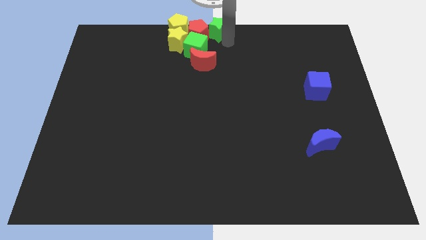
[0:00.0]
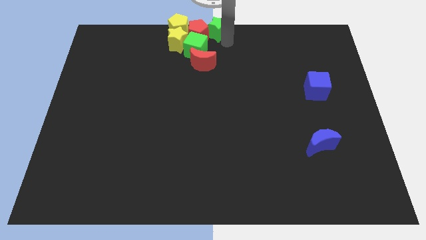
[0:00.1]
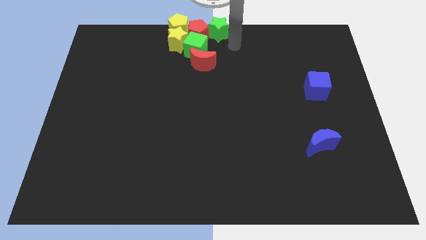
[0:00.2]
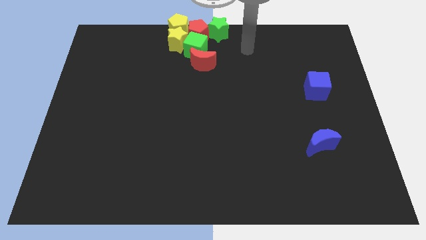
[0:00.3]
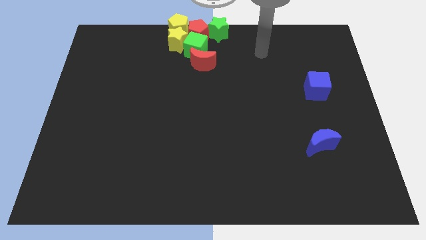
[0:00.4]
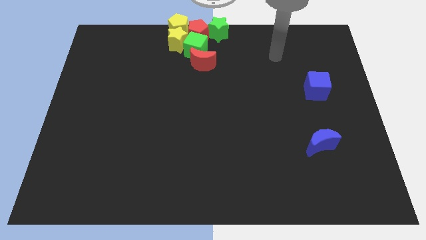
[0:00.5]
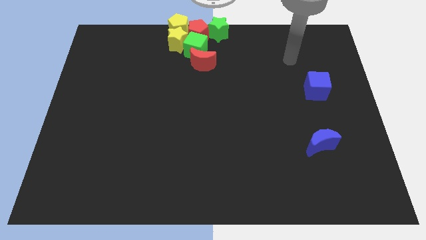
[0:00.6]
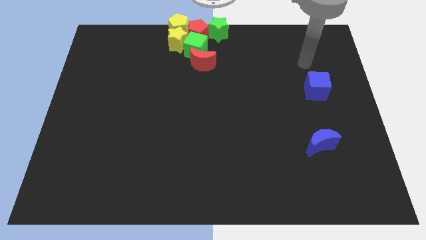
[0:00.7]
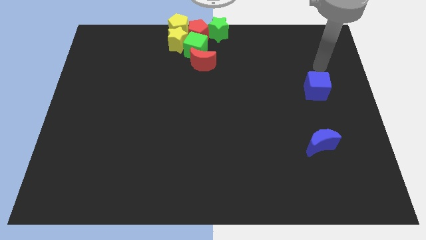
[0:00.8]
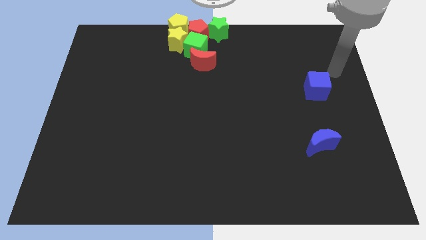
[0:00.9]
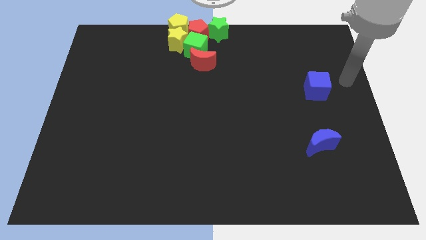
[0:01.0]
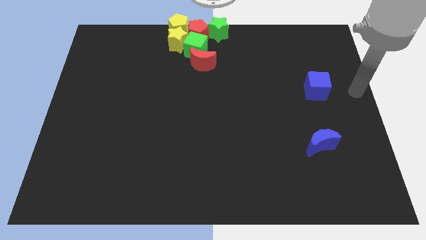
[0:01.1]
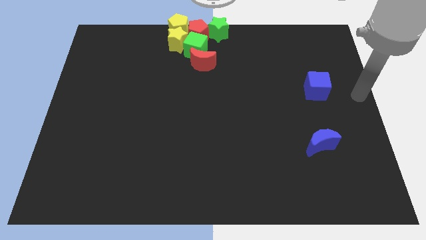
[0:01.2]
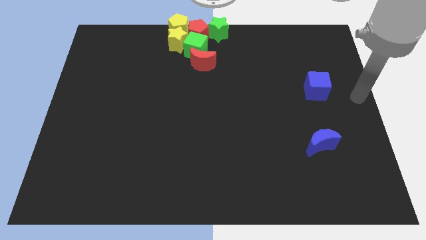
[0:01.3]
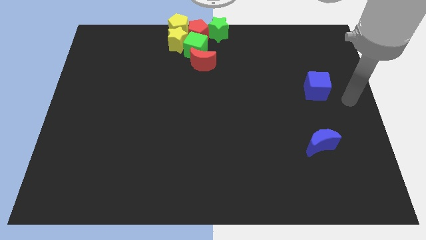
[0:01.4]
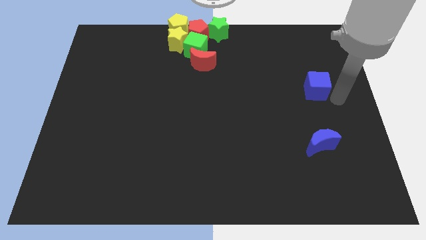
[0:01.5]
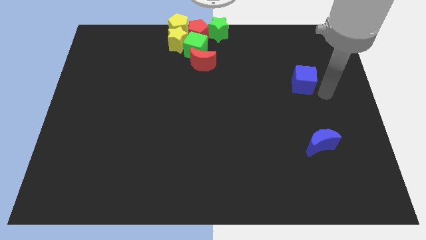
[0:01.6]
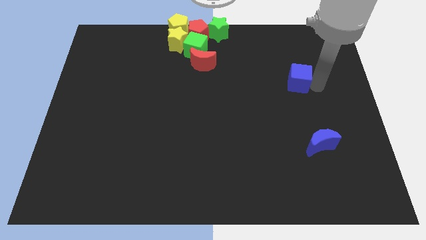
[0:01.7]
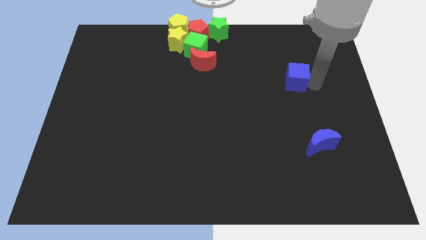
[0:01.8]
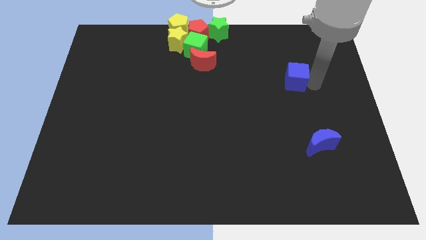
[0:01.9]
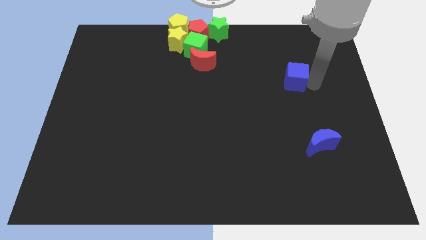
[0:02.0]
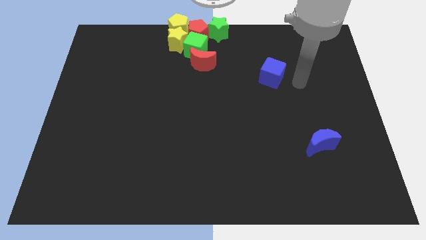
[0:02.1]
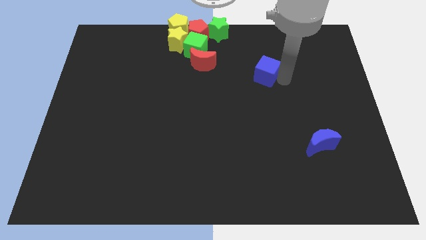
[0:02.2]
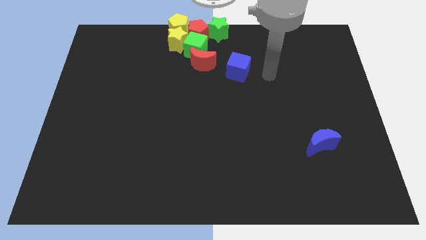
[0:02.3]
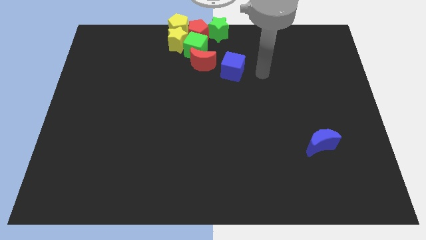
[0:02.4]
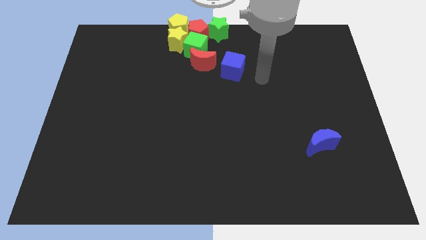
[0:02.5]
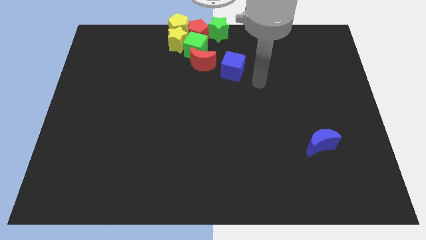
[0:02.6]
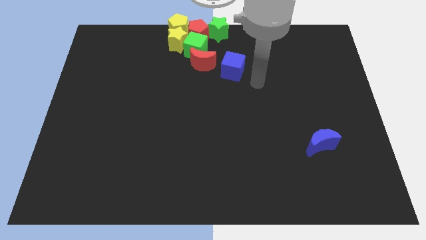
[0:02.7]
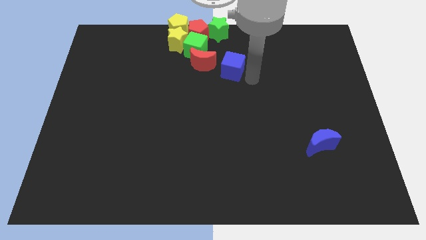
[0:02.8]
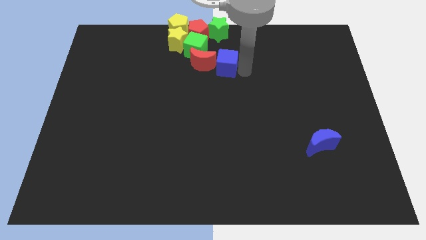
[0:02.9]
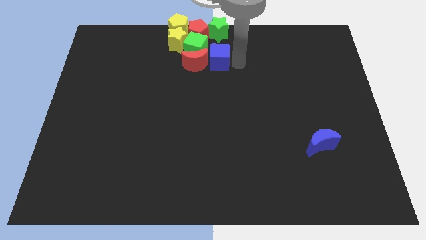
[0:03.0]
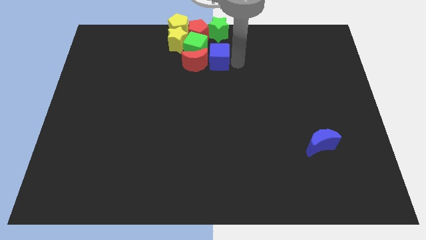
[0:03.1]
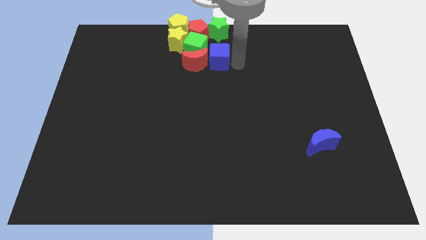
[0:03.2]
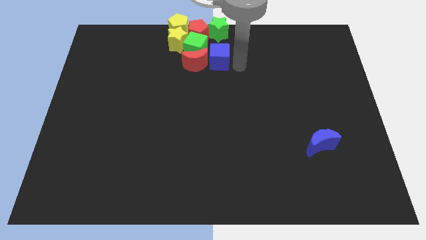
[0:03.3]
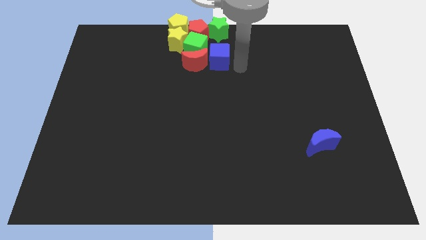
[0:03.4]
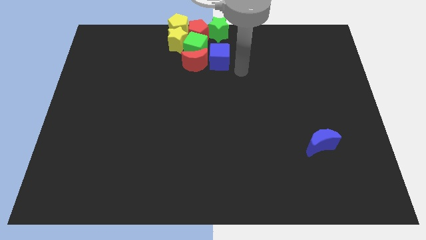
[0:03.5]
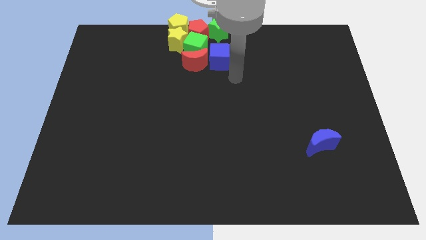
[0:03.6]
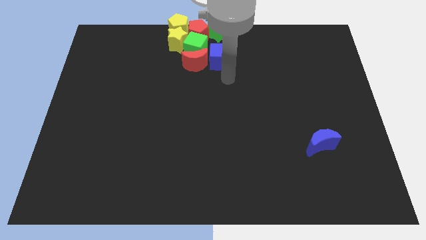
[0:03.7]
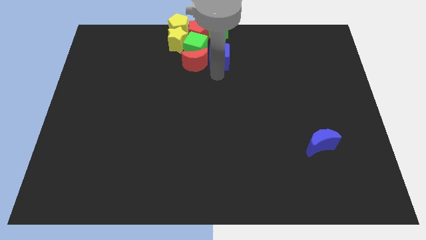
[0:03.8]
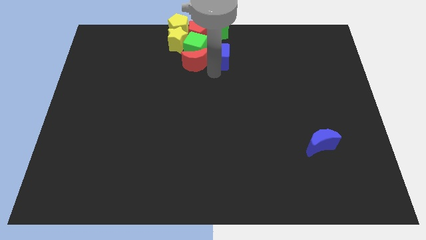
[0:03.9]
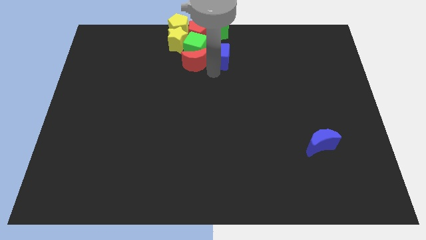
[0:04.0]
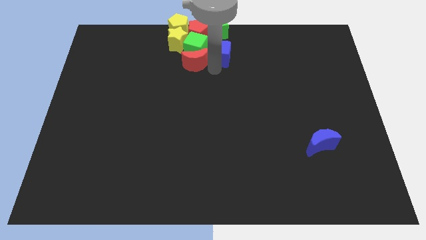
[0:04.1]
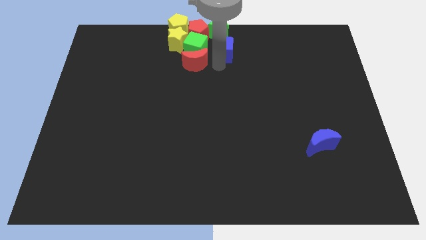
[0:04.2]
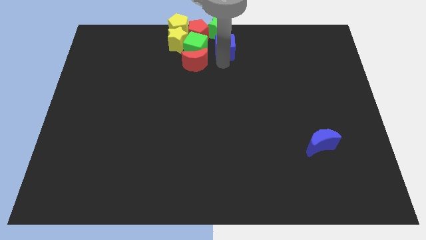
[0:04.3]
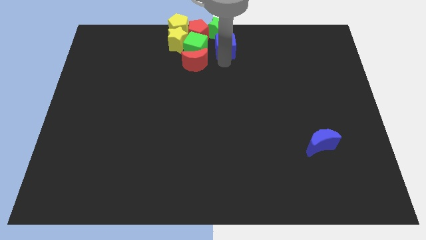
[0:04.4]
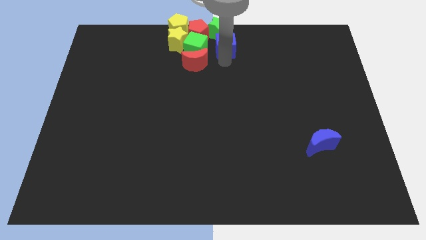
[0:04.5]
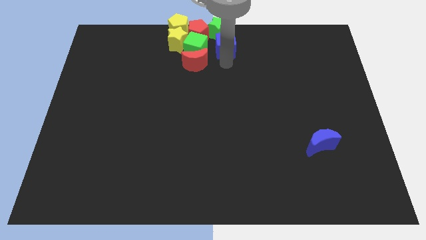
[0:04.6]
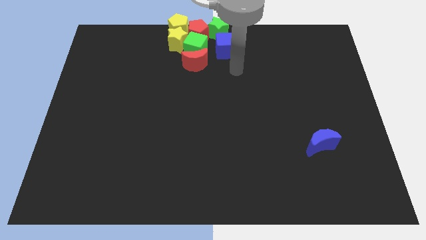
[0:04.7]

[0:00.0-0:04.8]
place the blue cube right to the green cube

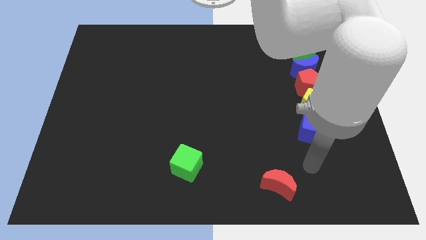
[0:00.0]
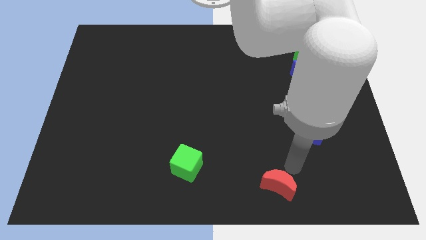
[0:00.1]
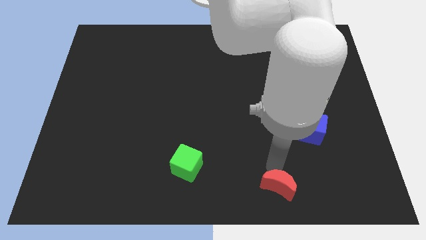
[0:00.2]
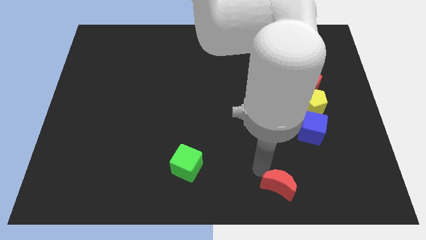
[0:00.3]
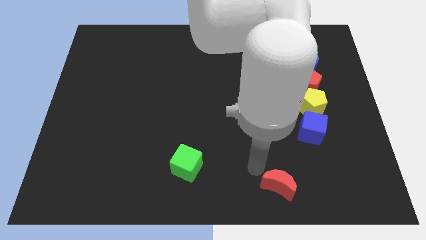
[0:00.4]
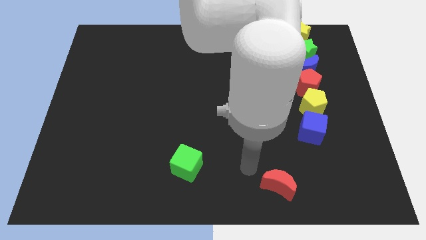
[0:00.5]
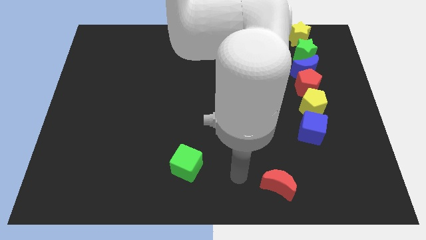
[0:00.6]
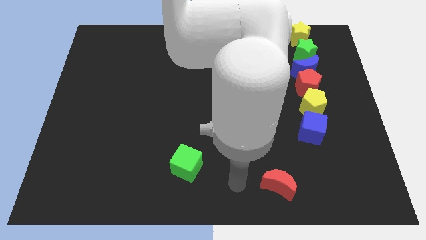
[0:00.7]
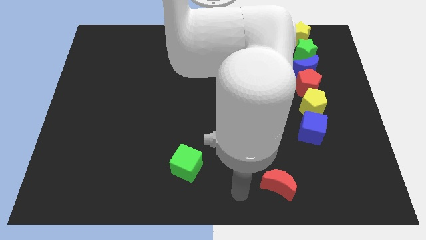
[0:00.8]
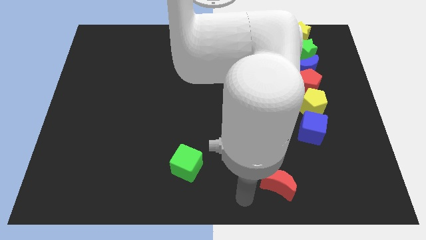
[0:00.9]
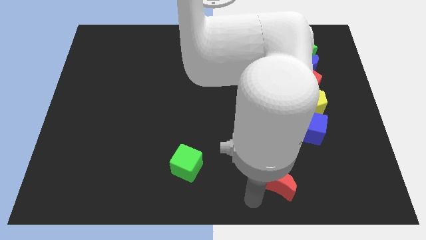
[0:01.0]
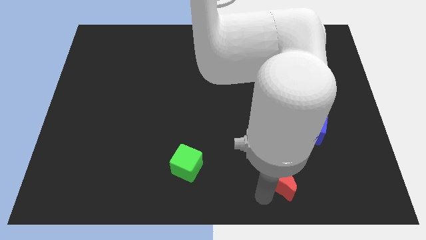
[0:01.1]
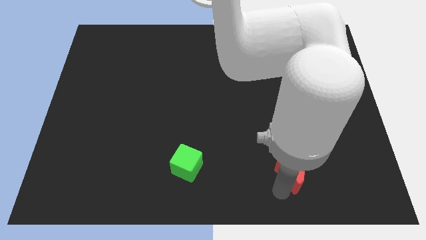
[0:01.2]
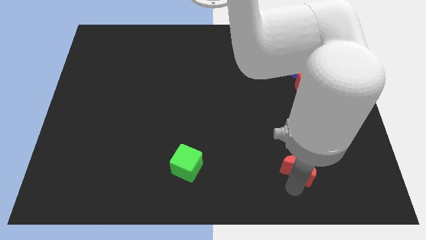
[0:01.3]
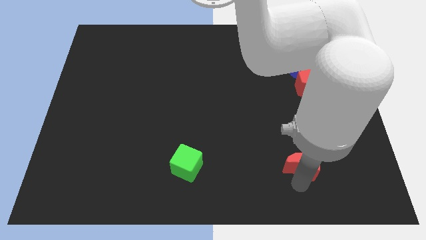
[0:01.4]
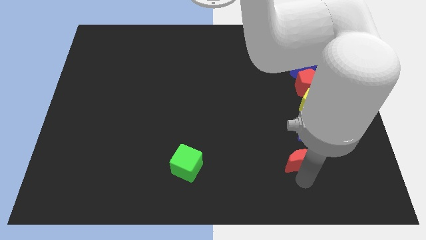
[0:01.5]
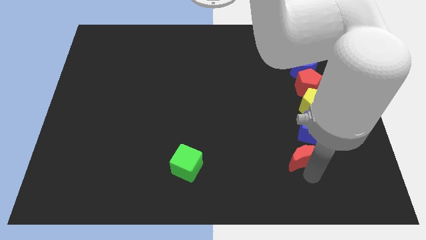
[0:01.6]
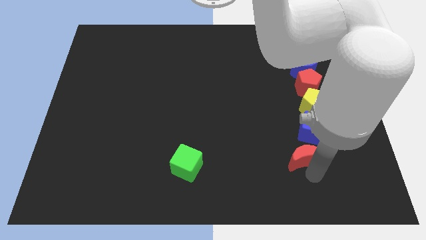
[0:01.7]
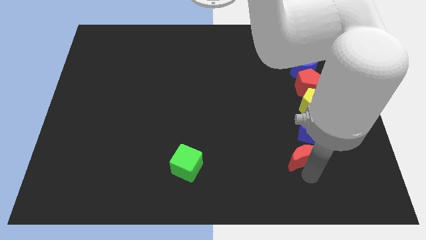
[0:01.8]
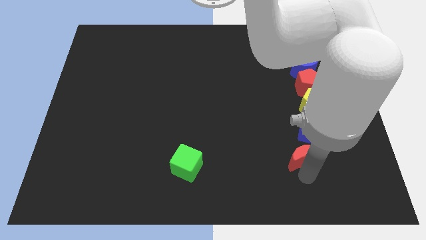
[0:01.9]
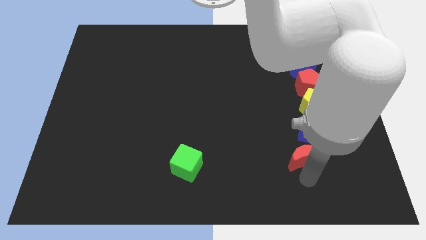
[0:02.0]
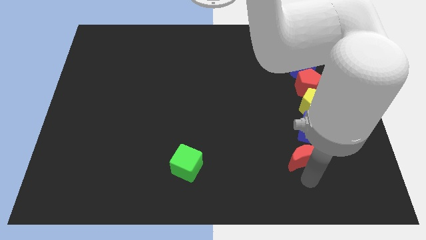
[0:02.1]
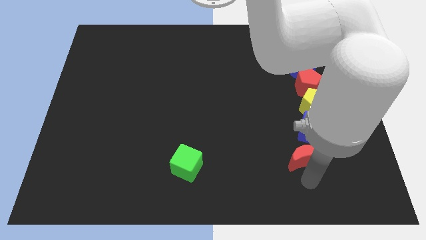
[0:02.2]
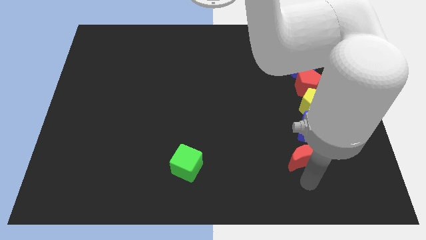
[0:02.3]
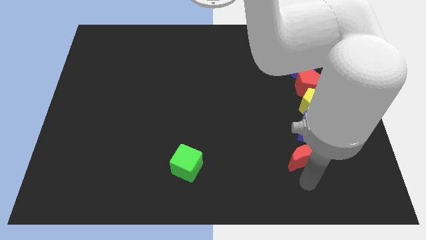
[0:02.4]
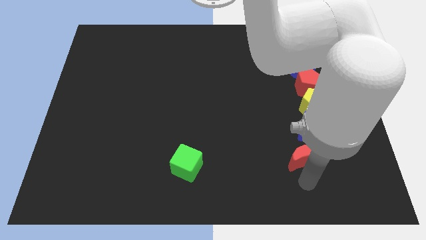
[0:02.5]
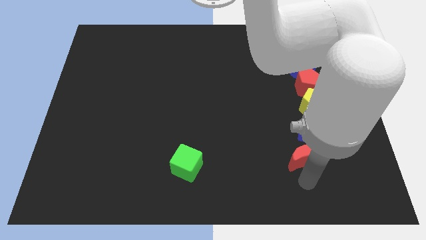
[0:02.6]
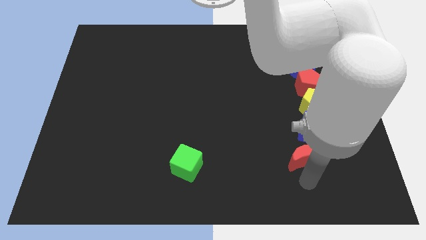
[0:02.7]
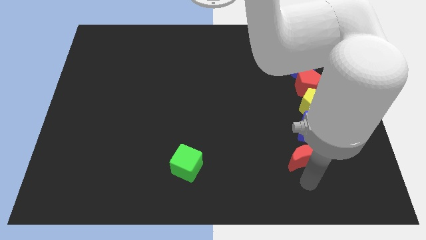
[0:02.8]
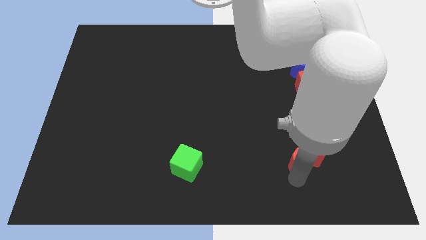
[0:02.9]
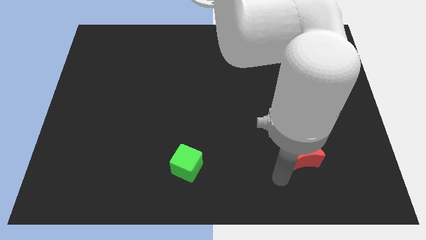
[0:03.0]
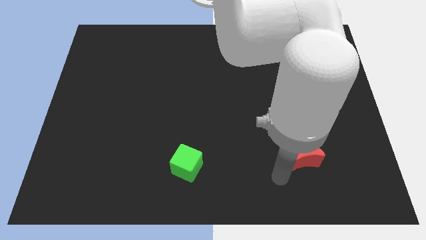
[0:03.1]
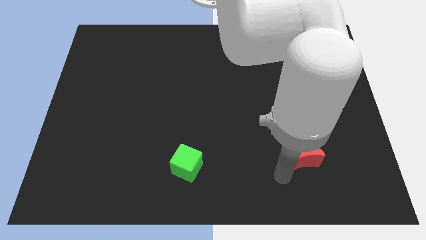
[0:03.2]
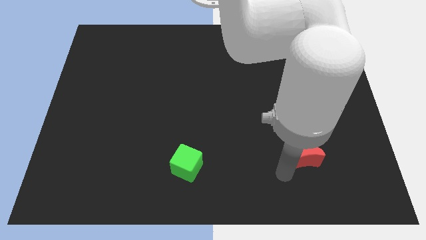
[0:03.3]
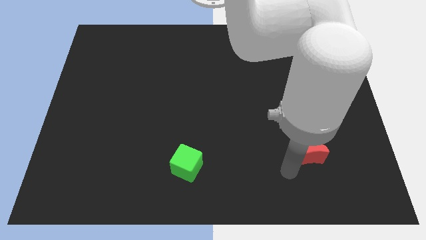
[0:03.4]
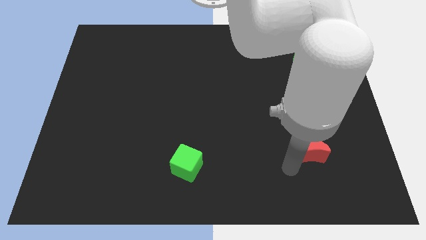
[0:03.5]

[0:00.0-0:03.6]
place the red moon below the blue cube

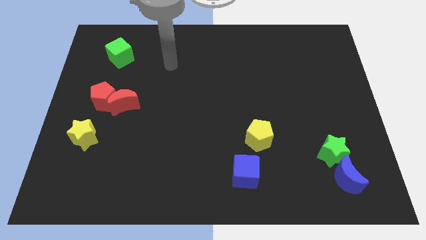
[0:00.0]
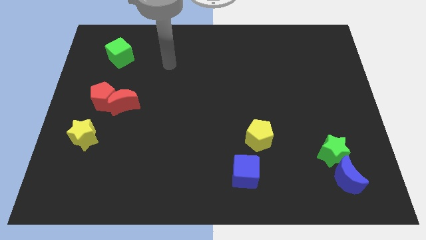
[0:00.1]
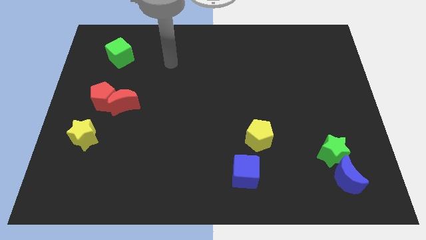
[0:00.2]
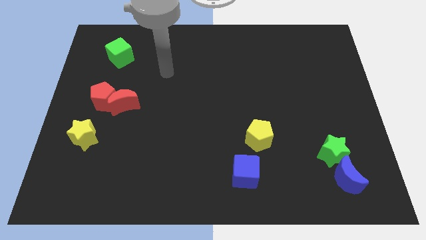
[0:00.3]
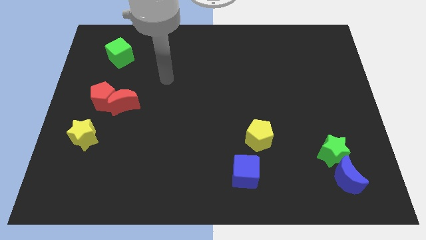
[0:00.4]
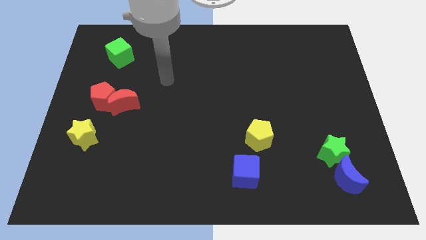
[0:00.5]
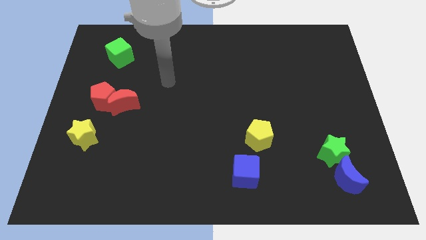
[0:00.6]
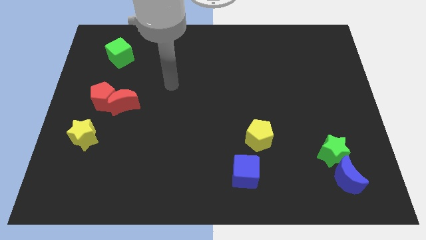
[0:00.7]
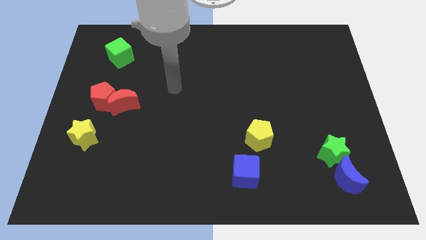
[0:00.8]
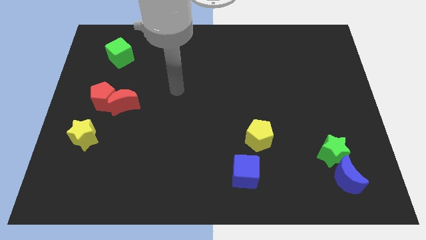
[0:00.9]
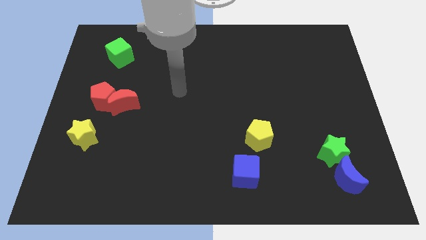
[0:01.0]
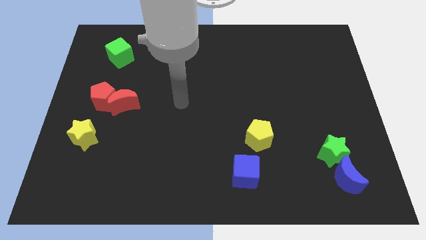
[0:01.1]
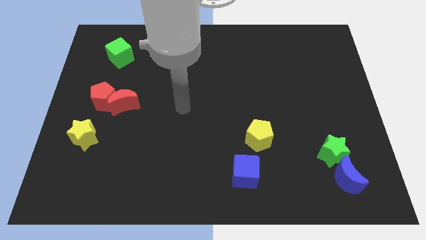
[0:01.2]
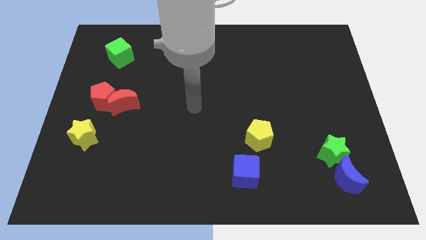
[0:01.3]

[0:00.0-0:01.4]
move your hand right to the red moon
